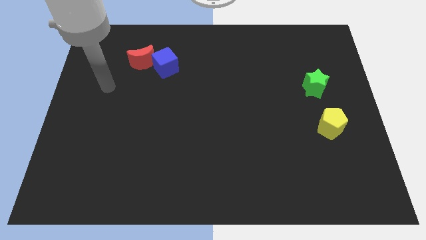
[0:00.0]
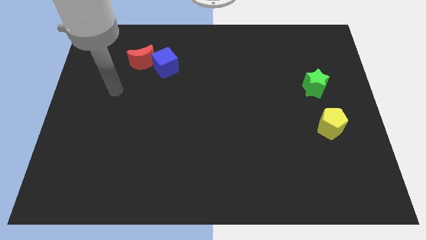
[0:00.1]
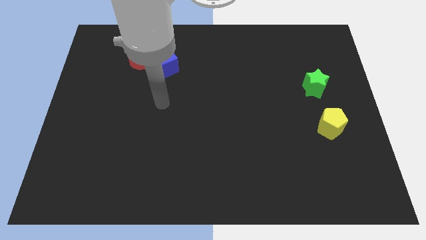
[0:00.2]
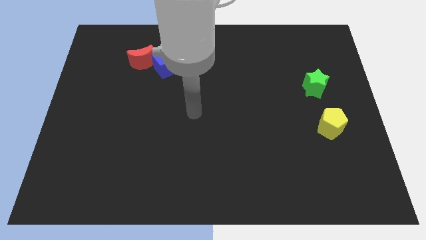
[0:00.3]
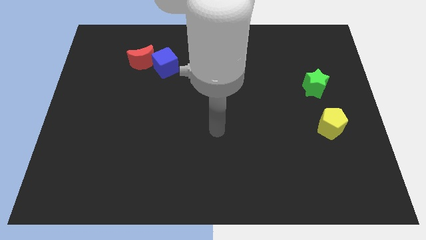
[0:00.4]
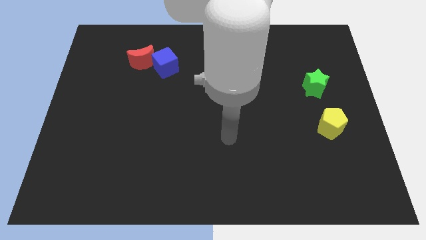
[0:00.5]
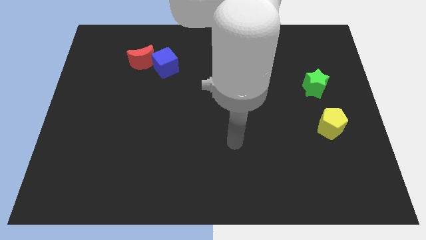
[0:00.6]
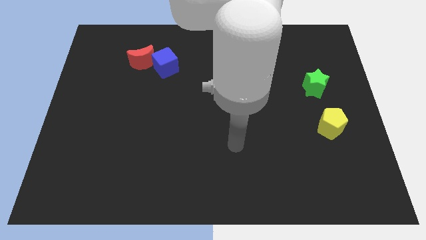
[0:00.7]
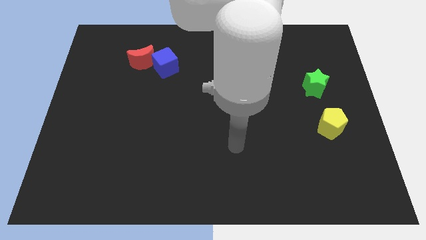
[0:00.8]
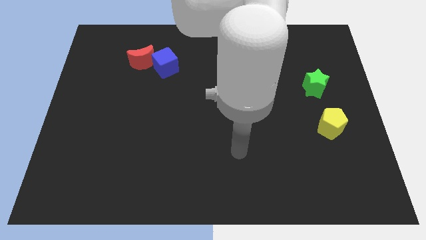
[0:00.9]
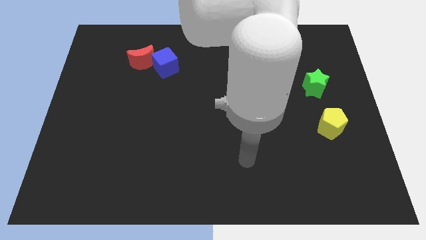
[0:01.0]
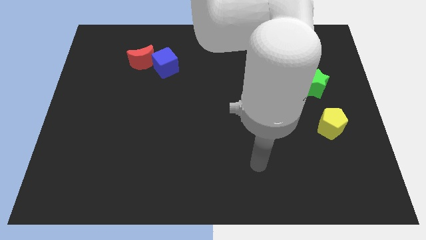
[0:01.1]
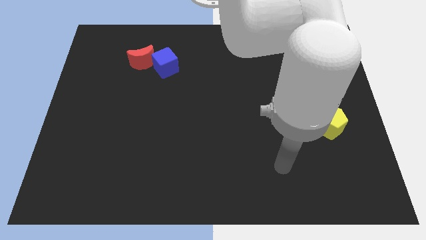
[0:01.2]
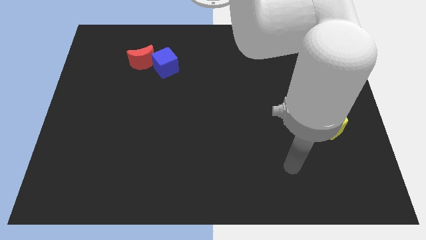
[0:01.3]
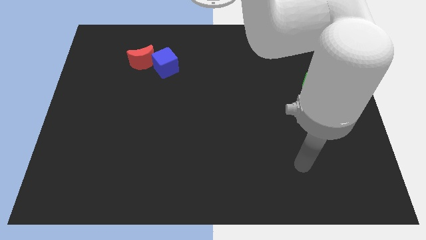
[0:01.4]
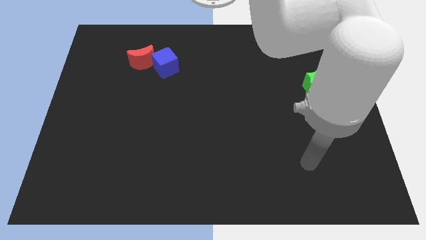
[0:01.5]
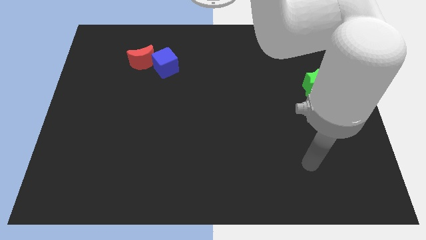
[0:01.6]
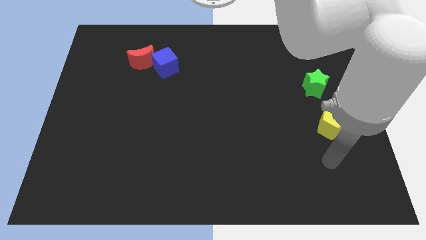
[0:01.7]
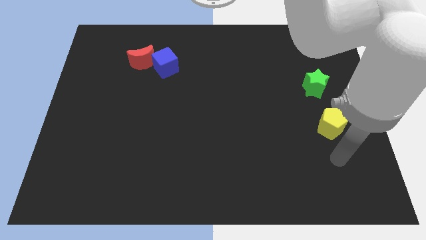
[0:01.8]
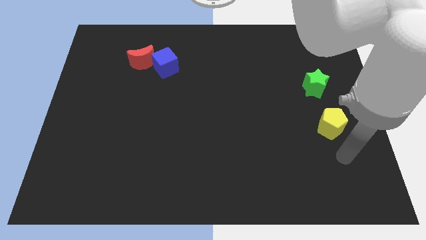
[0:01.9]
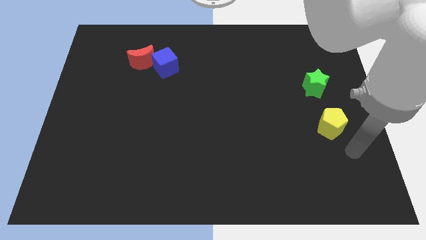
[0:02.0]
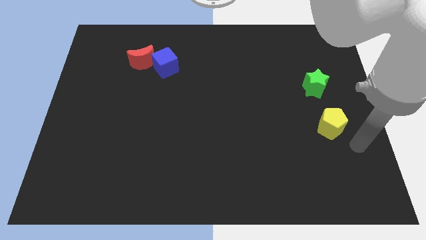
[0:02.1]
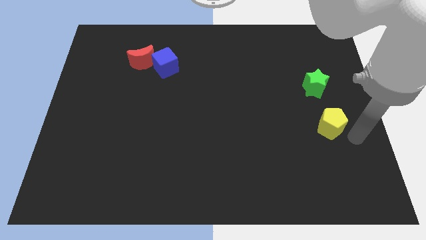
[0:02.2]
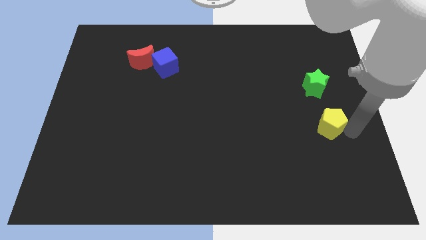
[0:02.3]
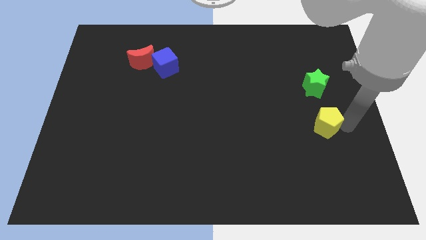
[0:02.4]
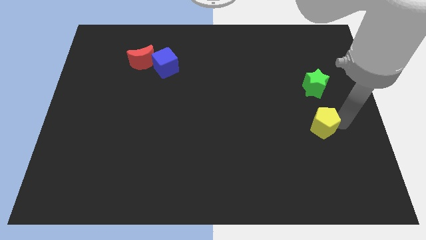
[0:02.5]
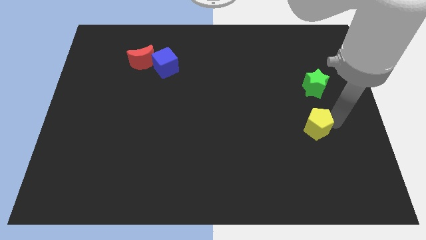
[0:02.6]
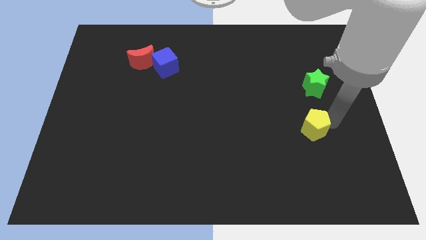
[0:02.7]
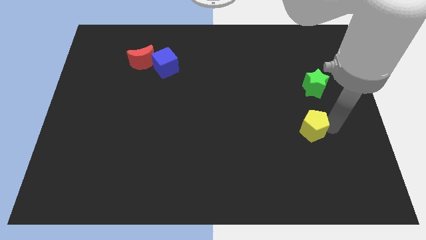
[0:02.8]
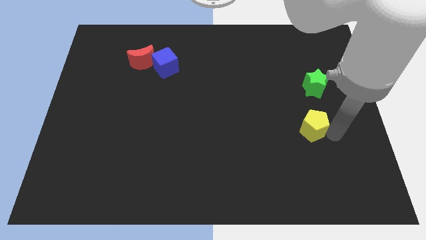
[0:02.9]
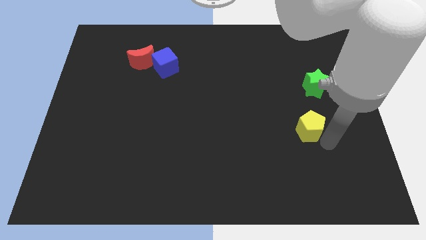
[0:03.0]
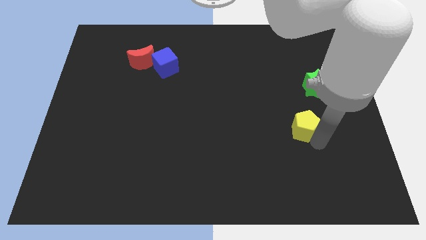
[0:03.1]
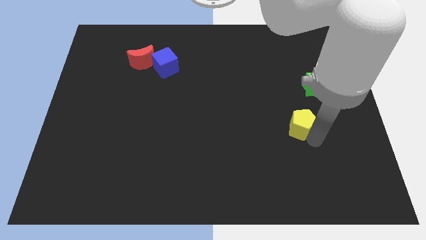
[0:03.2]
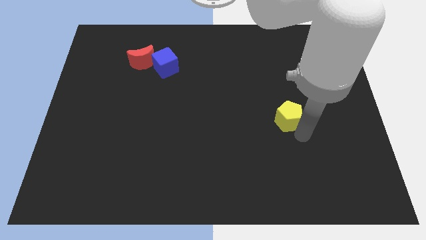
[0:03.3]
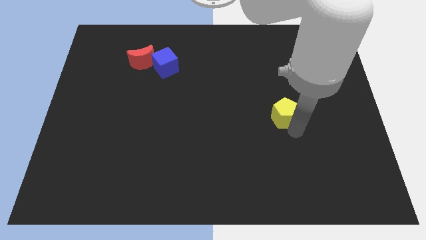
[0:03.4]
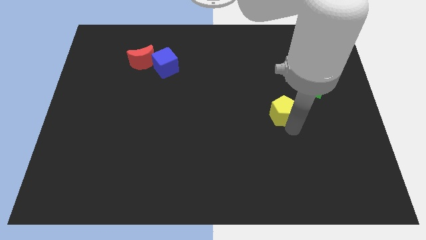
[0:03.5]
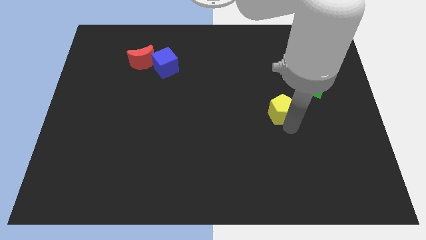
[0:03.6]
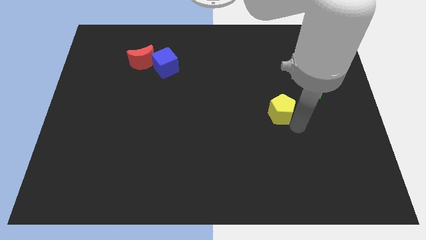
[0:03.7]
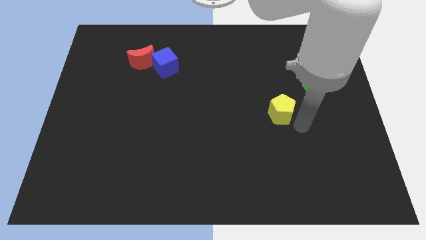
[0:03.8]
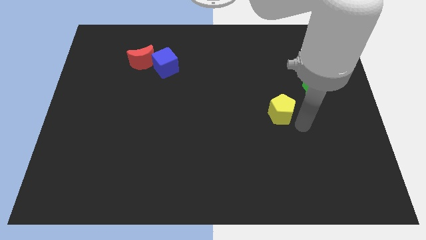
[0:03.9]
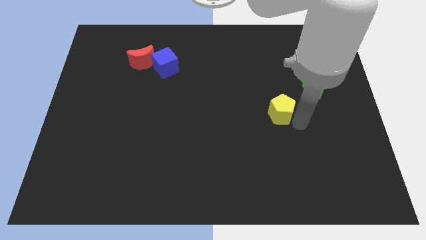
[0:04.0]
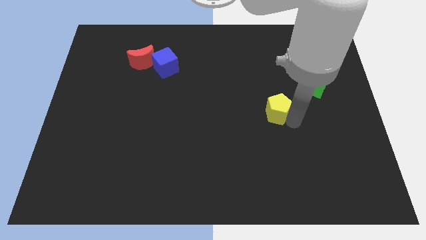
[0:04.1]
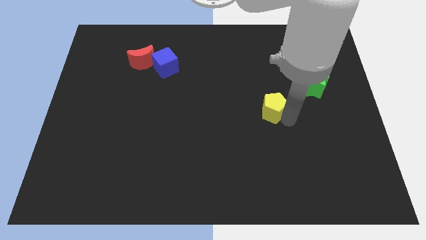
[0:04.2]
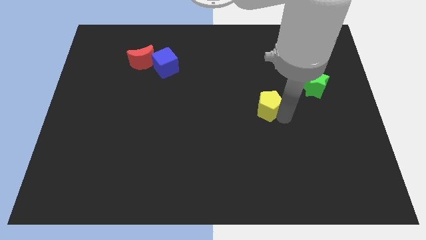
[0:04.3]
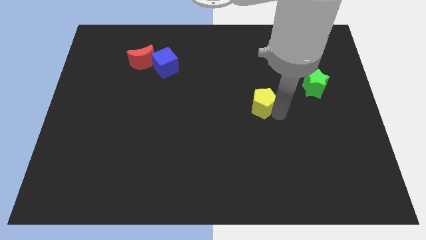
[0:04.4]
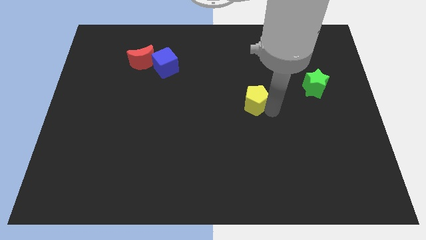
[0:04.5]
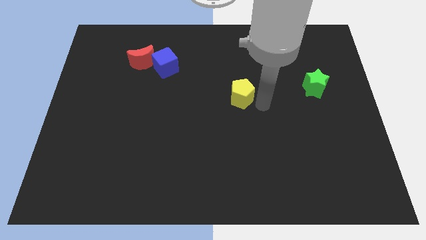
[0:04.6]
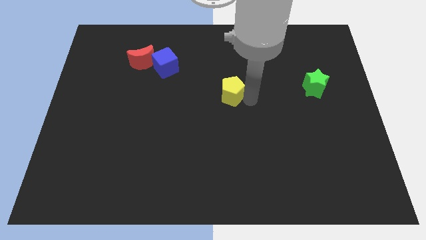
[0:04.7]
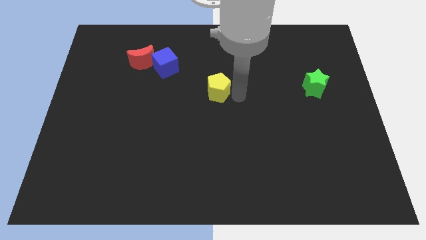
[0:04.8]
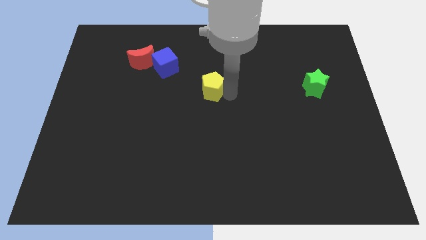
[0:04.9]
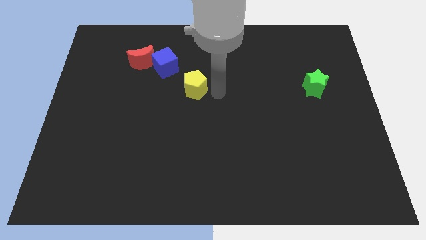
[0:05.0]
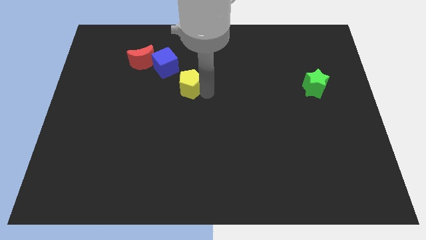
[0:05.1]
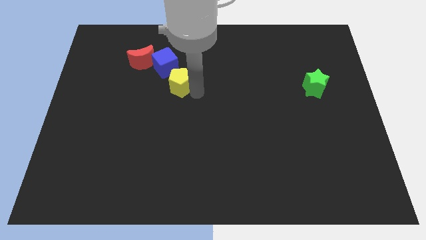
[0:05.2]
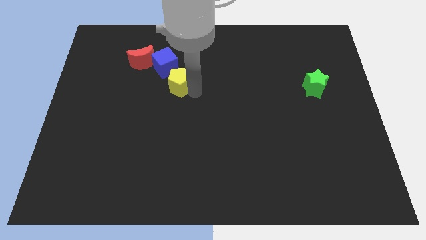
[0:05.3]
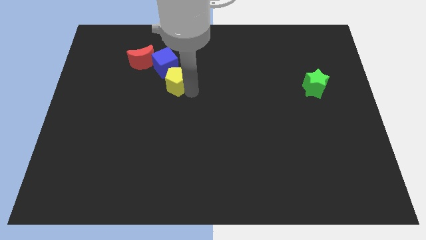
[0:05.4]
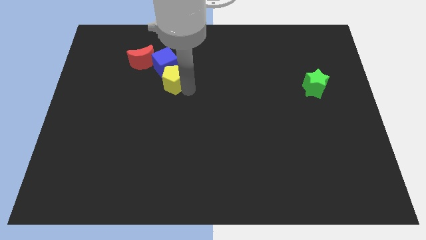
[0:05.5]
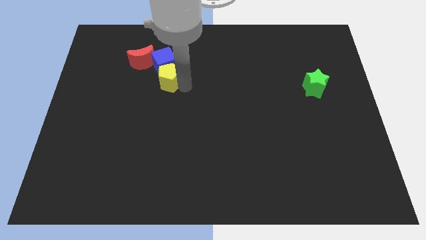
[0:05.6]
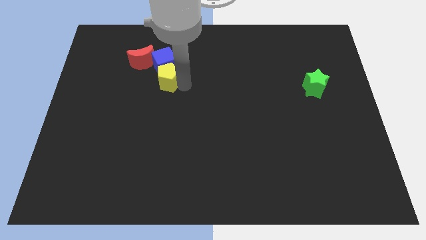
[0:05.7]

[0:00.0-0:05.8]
move the yellow block next to the blue cube

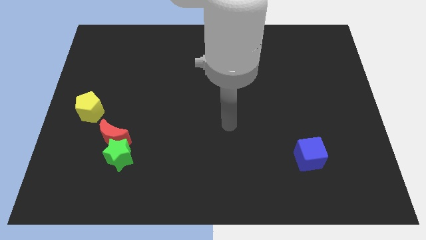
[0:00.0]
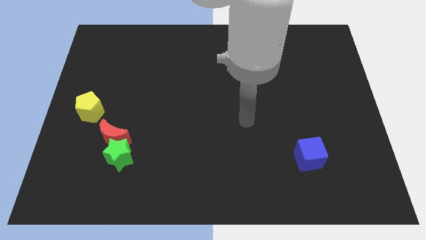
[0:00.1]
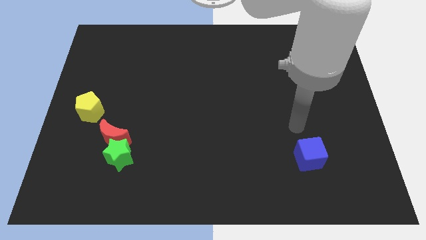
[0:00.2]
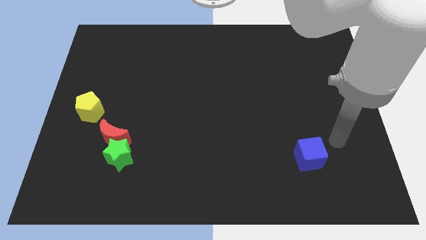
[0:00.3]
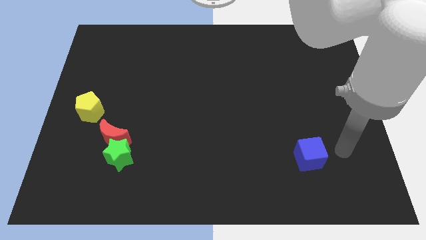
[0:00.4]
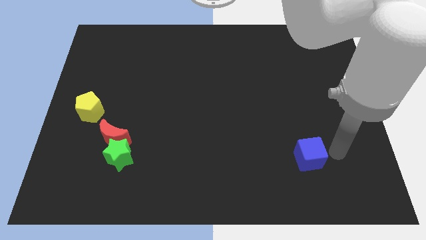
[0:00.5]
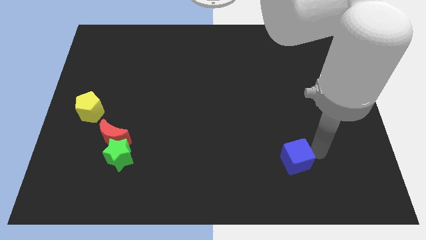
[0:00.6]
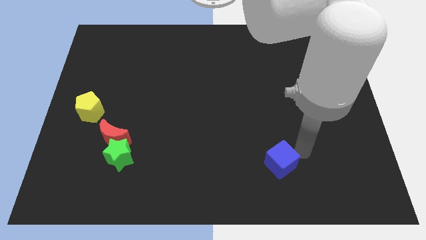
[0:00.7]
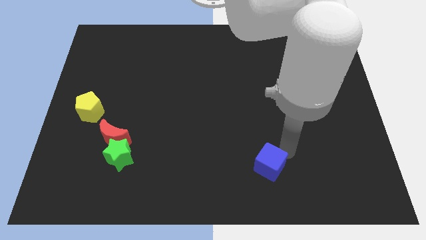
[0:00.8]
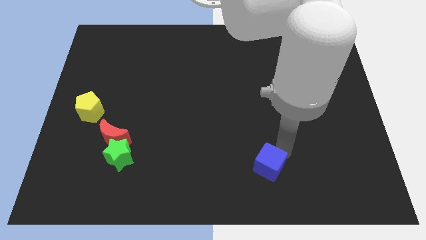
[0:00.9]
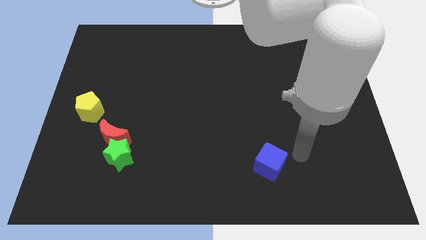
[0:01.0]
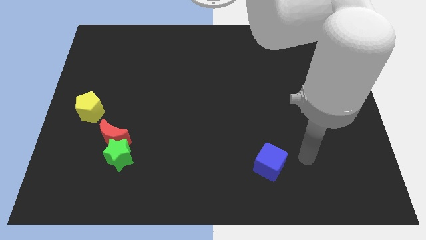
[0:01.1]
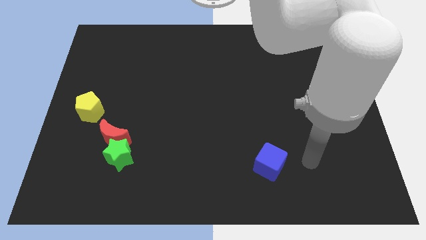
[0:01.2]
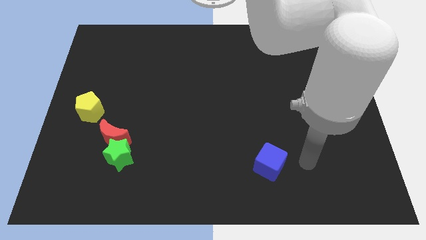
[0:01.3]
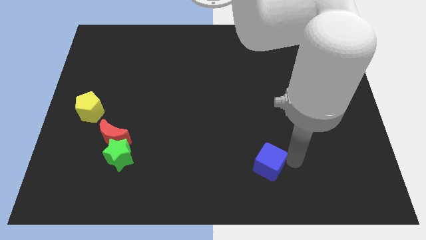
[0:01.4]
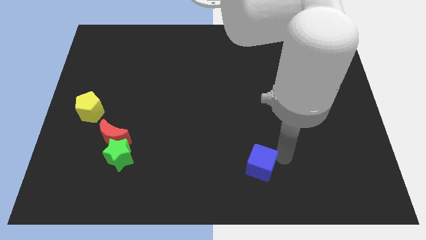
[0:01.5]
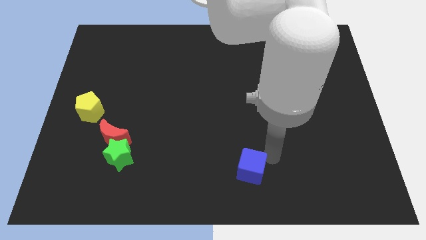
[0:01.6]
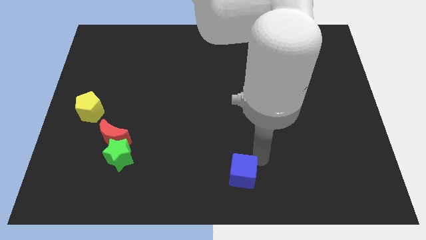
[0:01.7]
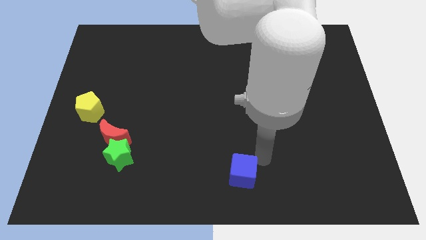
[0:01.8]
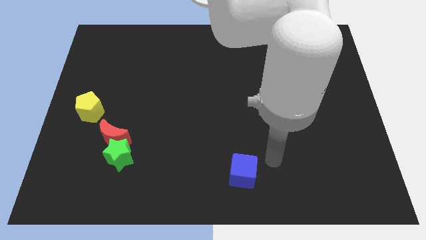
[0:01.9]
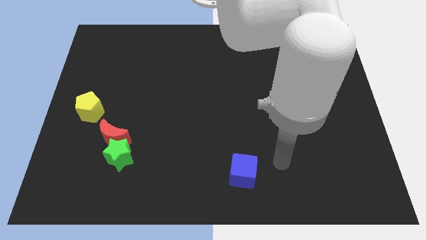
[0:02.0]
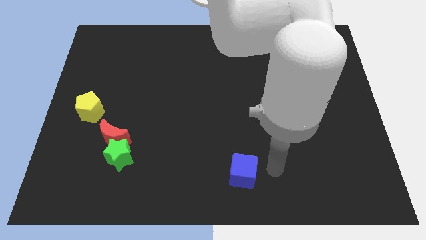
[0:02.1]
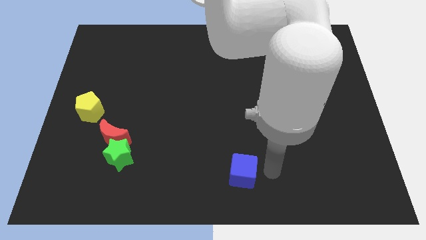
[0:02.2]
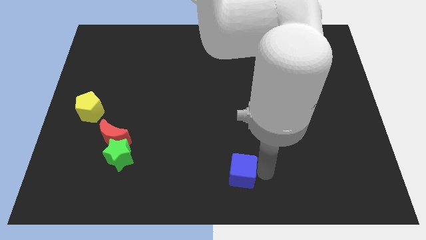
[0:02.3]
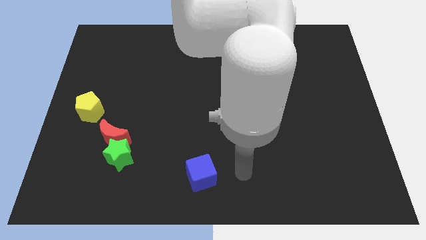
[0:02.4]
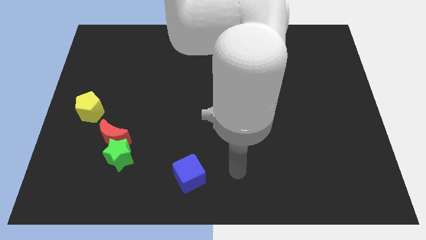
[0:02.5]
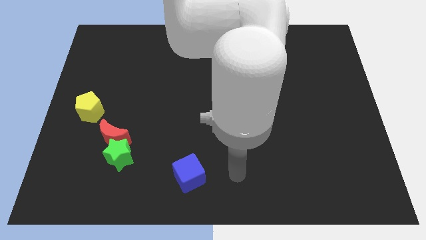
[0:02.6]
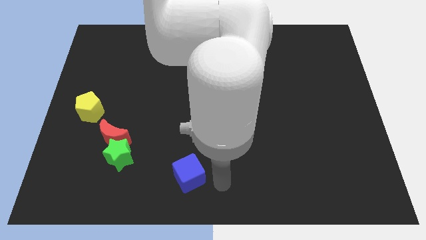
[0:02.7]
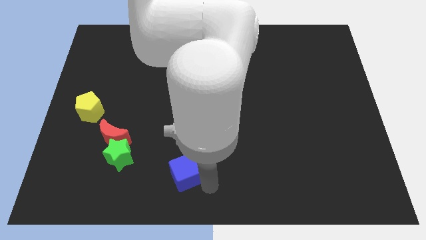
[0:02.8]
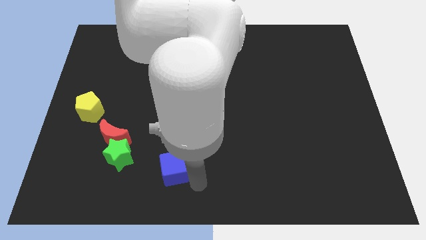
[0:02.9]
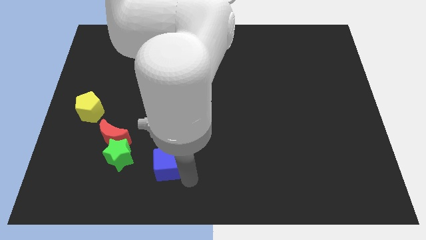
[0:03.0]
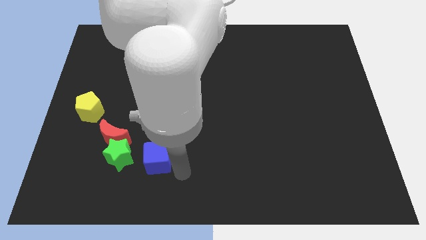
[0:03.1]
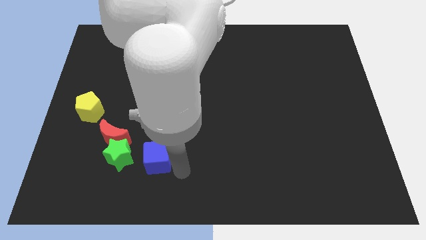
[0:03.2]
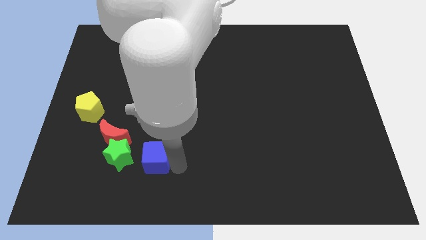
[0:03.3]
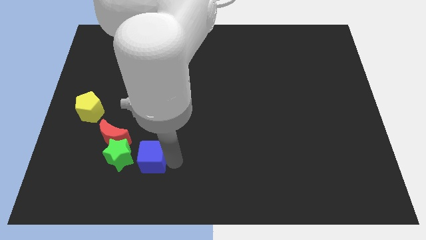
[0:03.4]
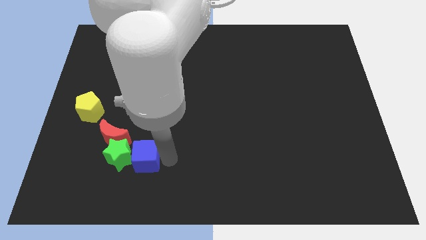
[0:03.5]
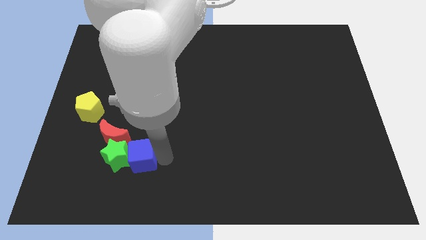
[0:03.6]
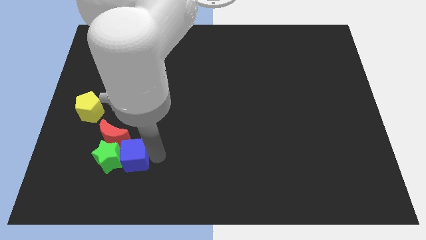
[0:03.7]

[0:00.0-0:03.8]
put the cube towards the green star
